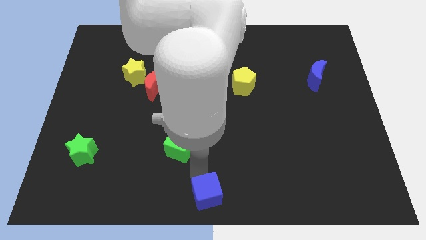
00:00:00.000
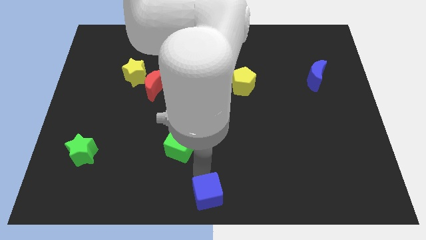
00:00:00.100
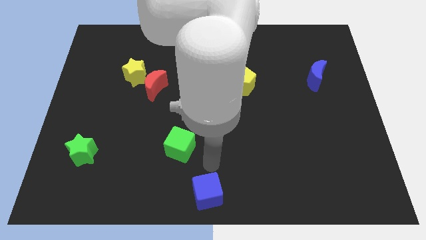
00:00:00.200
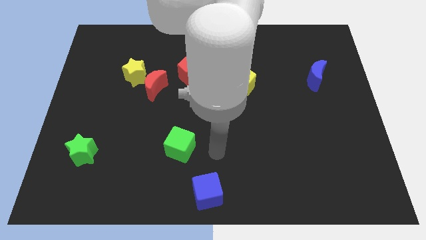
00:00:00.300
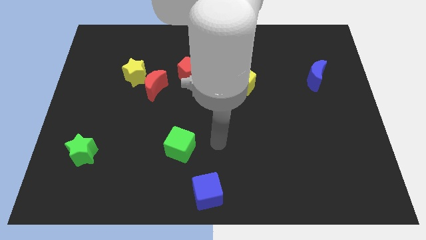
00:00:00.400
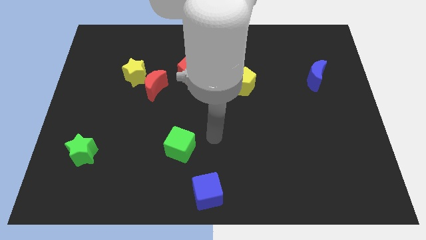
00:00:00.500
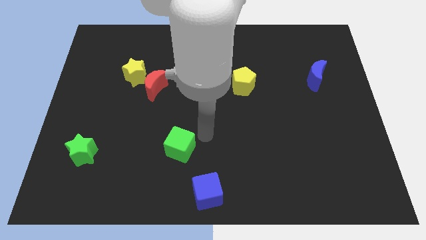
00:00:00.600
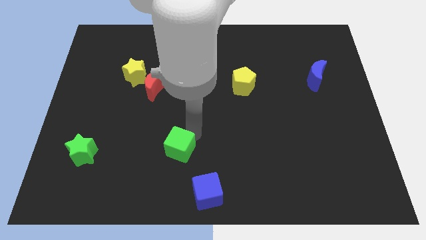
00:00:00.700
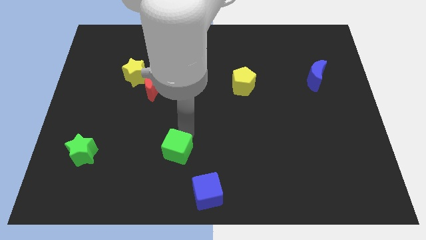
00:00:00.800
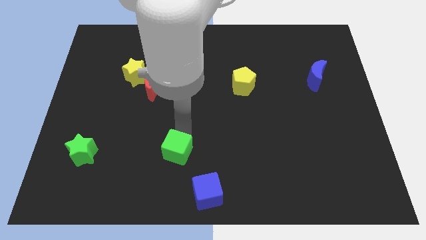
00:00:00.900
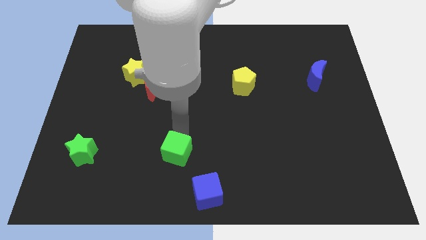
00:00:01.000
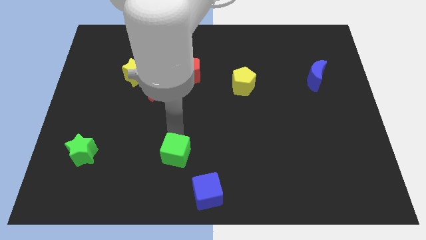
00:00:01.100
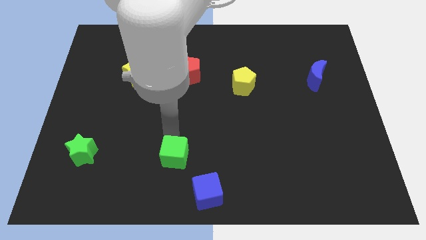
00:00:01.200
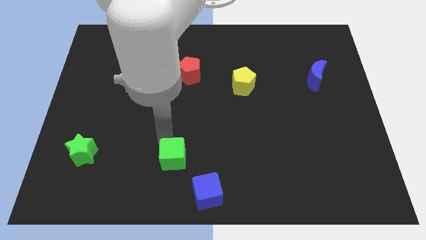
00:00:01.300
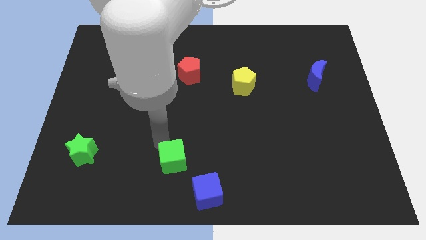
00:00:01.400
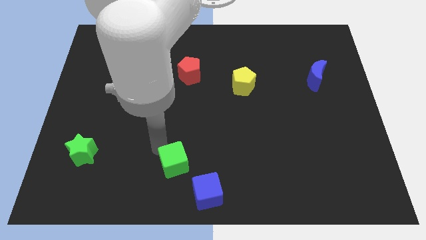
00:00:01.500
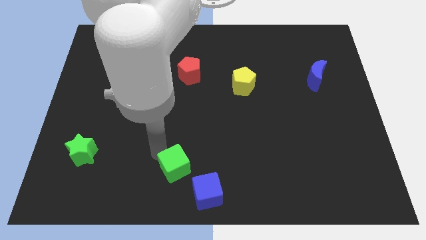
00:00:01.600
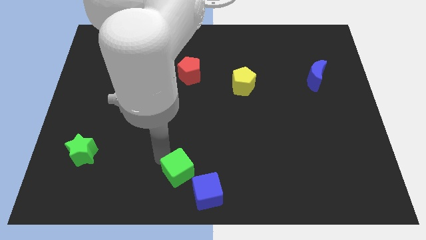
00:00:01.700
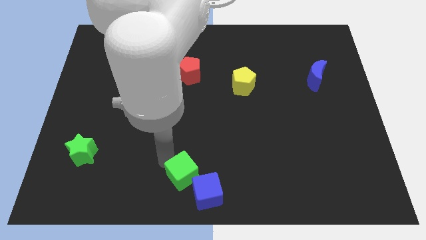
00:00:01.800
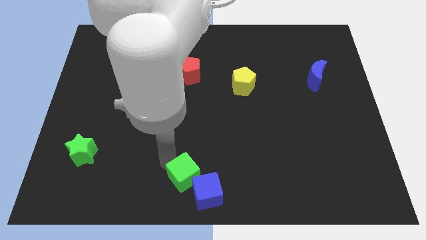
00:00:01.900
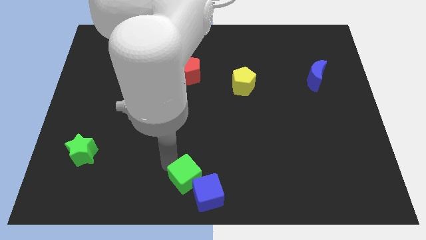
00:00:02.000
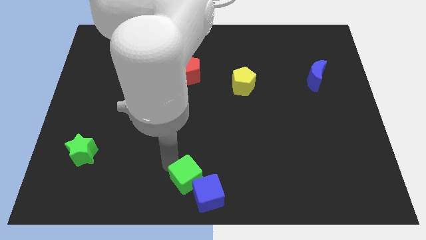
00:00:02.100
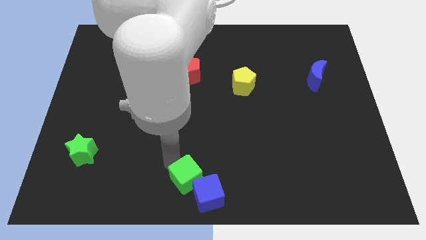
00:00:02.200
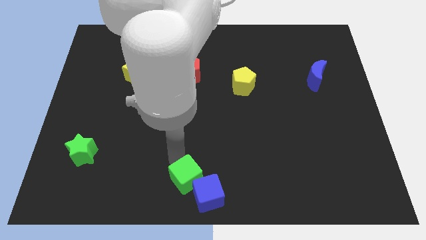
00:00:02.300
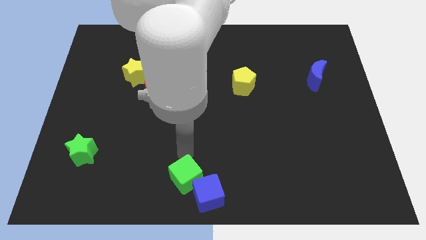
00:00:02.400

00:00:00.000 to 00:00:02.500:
push the green cube close tothe blue cube

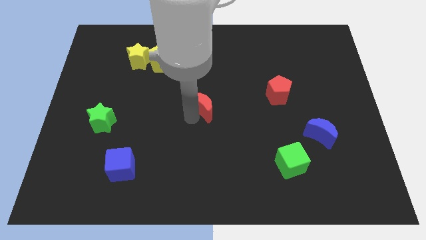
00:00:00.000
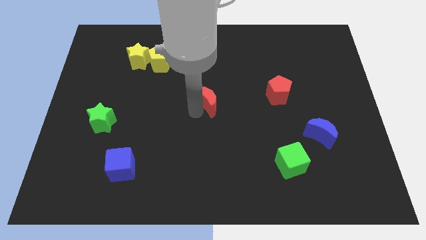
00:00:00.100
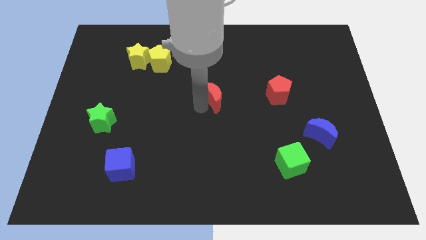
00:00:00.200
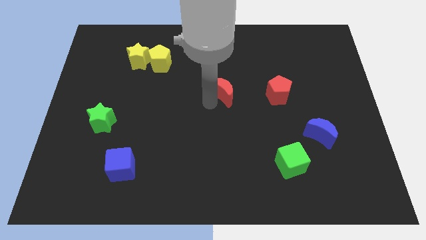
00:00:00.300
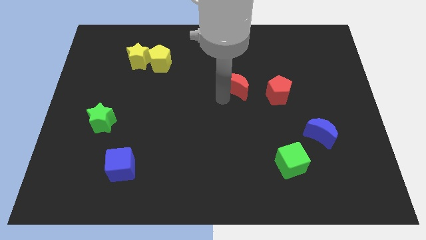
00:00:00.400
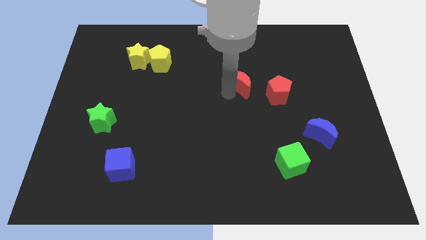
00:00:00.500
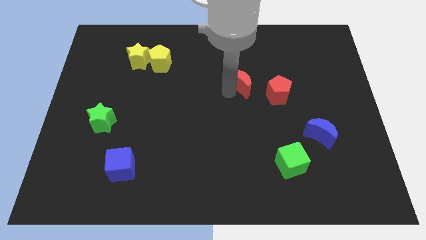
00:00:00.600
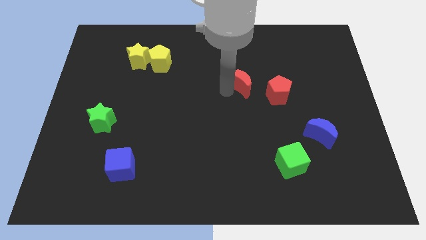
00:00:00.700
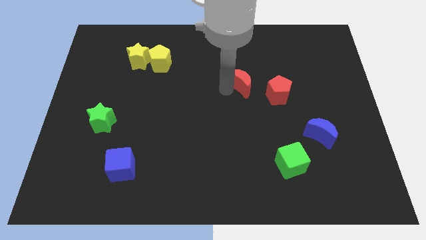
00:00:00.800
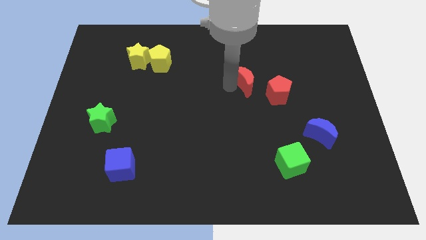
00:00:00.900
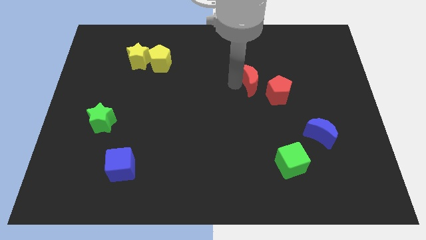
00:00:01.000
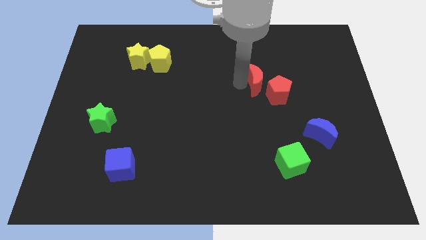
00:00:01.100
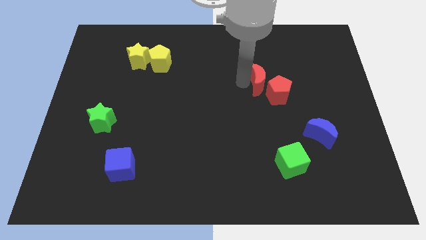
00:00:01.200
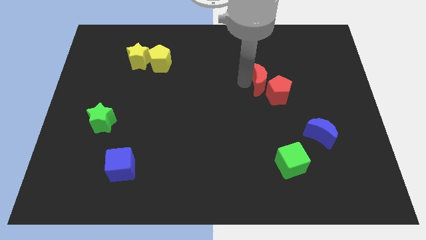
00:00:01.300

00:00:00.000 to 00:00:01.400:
move the red moon to the top left of the red pentagon

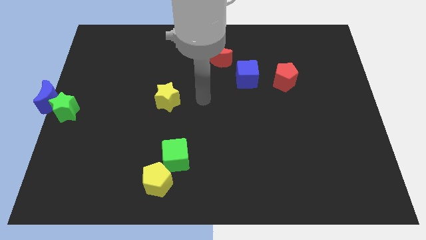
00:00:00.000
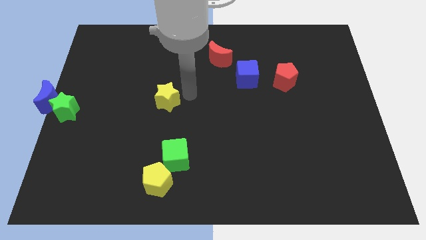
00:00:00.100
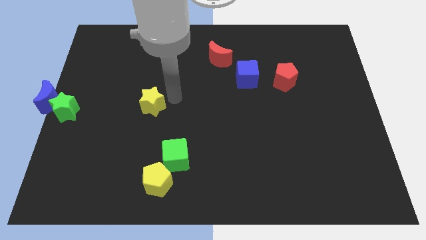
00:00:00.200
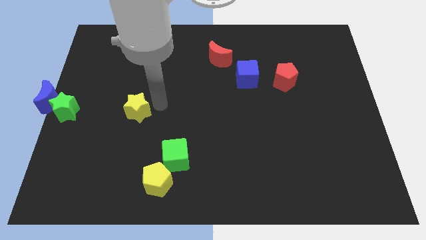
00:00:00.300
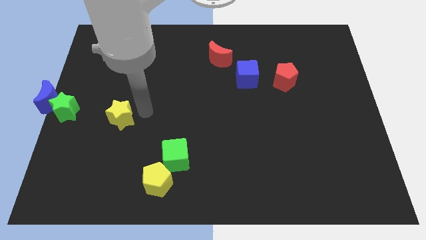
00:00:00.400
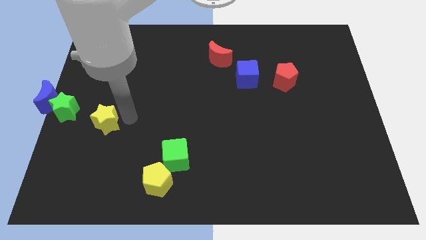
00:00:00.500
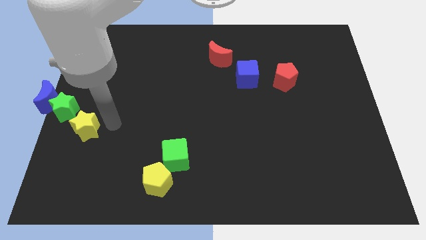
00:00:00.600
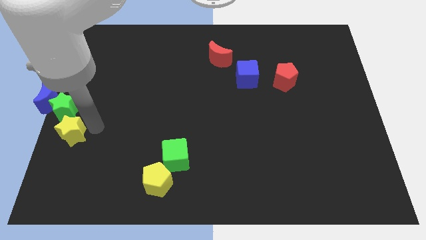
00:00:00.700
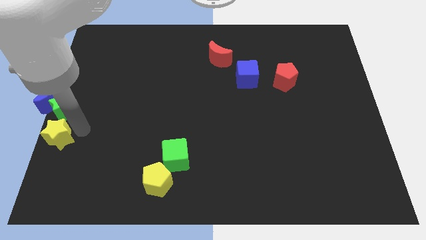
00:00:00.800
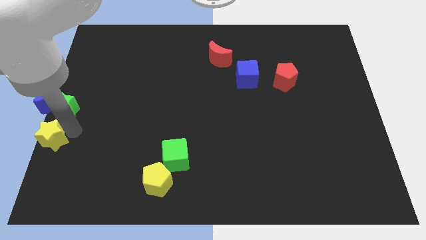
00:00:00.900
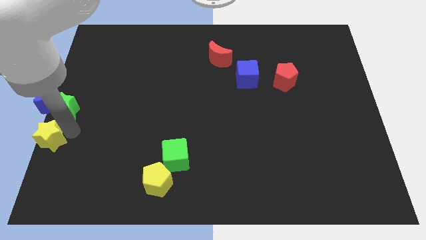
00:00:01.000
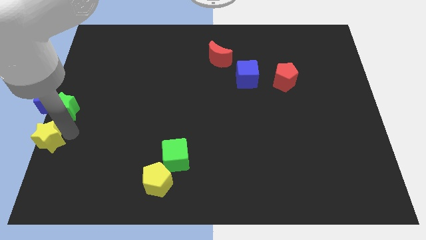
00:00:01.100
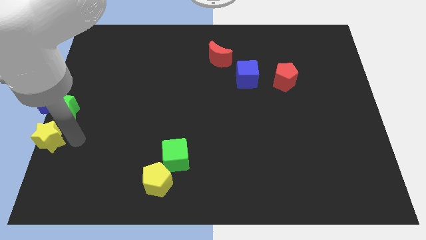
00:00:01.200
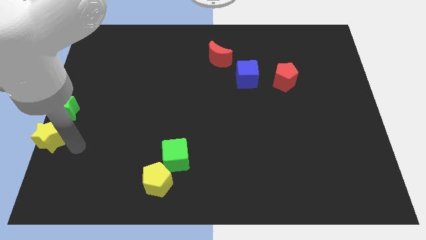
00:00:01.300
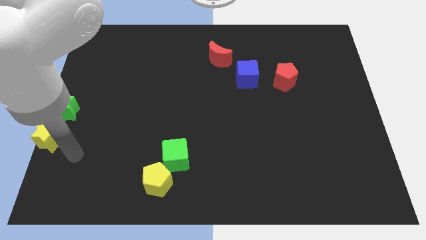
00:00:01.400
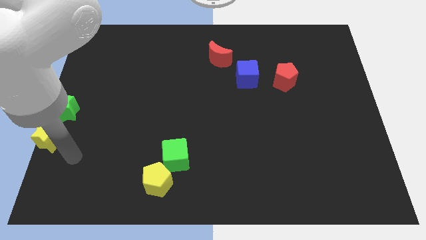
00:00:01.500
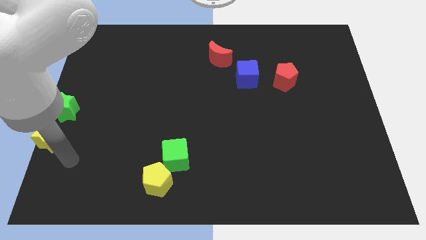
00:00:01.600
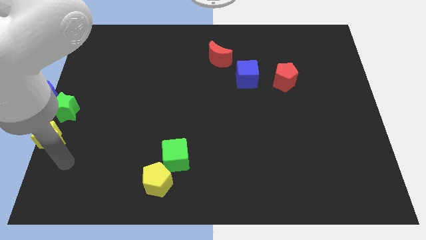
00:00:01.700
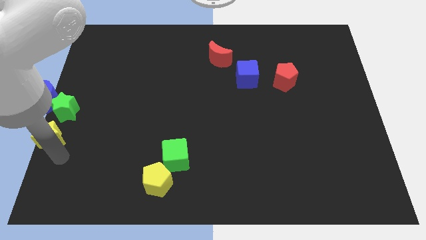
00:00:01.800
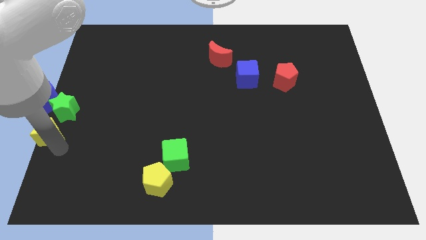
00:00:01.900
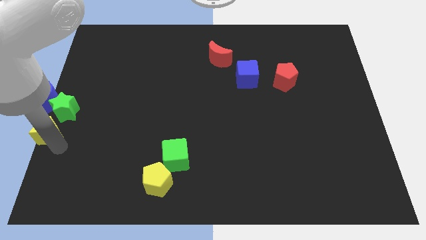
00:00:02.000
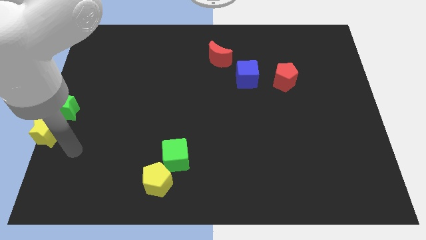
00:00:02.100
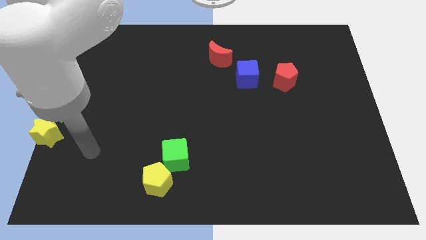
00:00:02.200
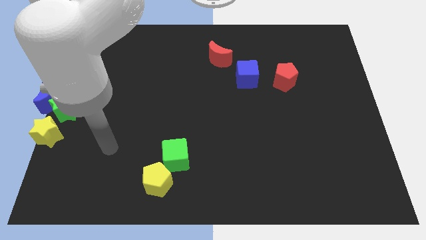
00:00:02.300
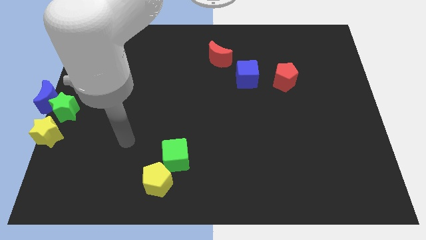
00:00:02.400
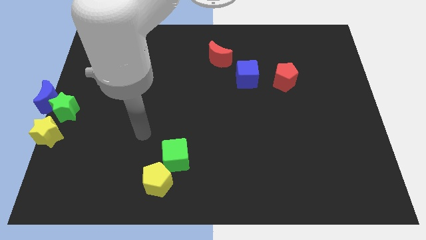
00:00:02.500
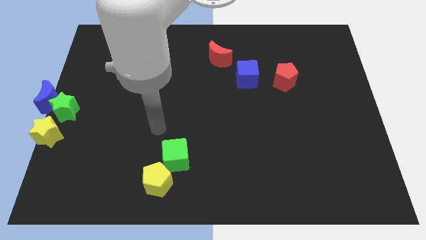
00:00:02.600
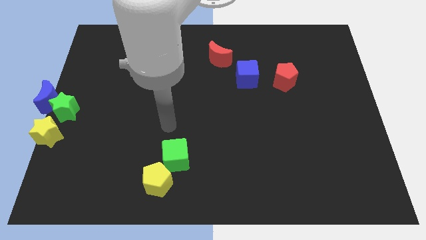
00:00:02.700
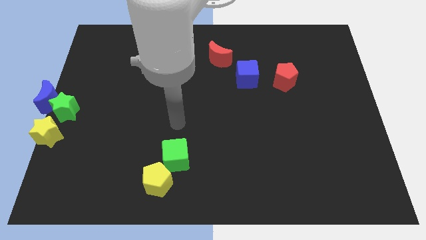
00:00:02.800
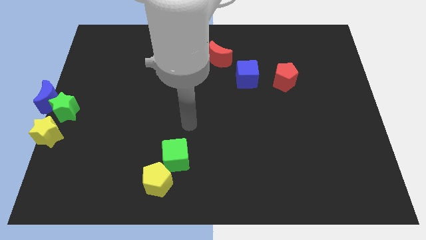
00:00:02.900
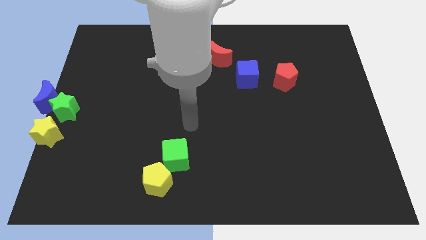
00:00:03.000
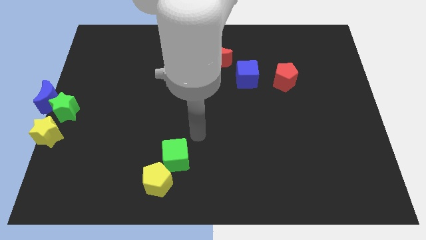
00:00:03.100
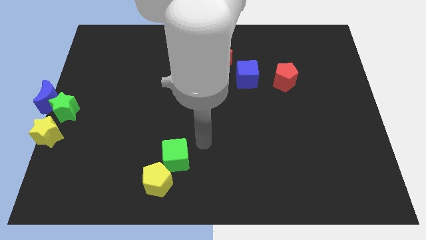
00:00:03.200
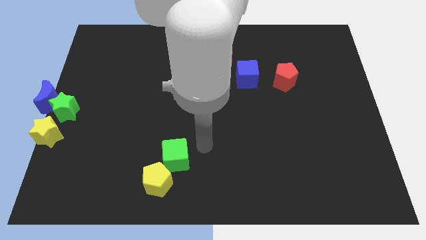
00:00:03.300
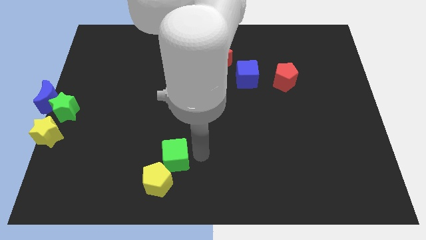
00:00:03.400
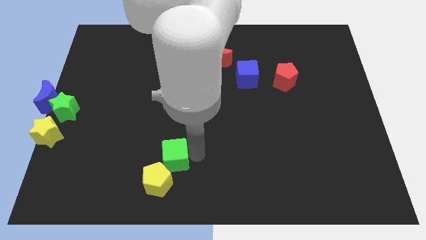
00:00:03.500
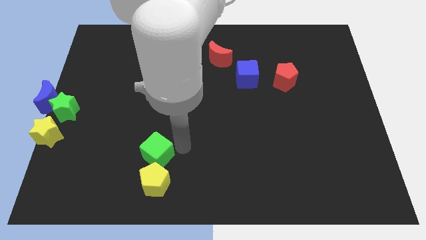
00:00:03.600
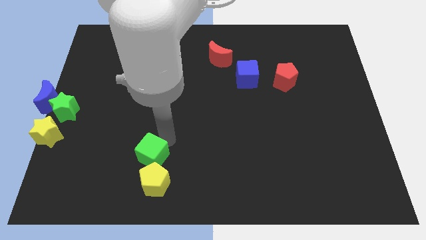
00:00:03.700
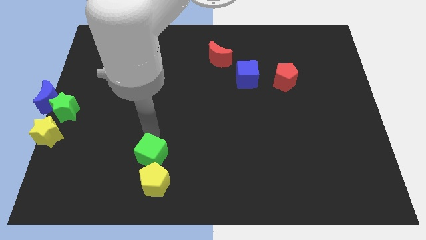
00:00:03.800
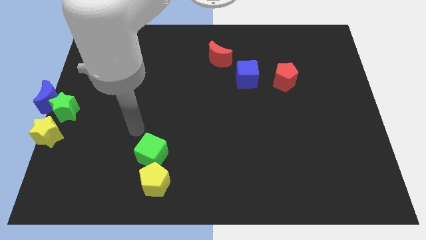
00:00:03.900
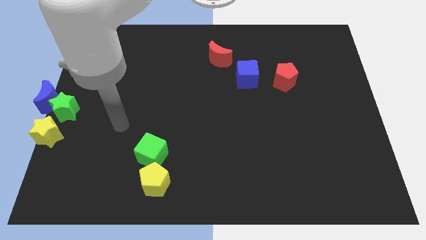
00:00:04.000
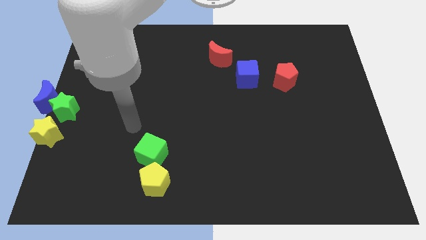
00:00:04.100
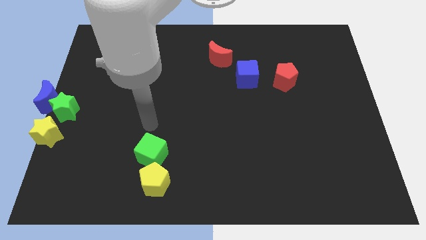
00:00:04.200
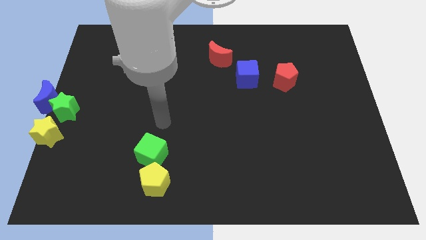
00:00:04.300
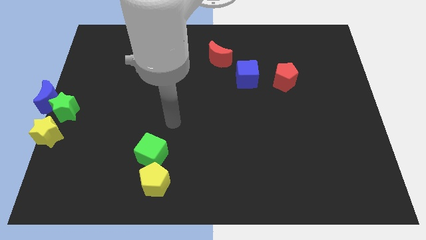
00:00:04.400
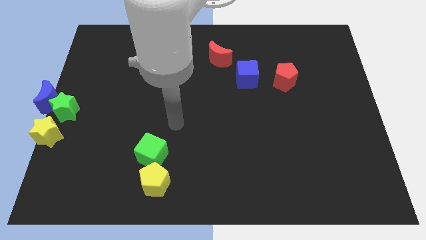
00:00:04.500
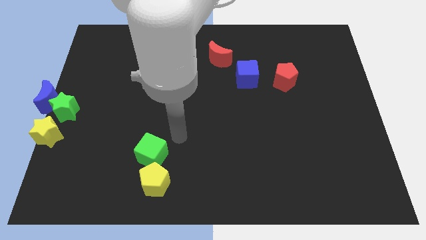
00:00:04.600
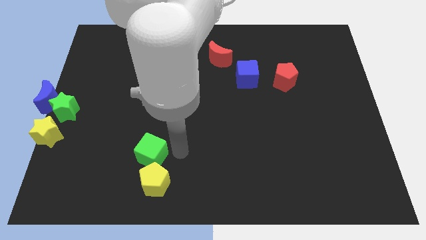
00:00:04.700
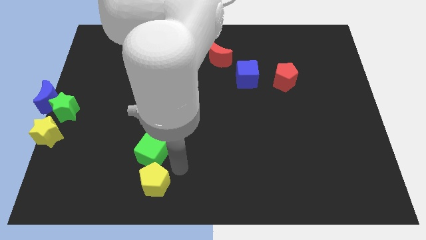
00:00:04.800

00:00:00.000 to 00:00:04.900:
put the yellow star below the blue crescent

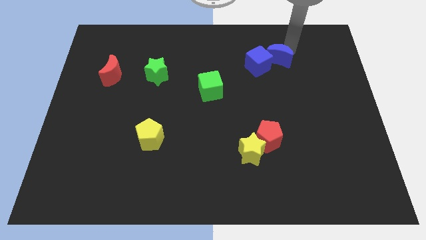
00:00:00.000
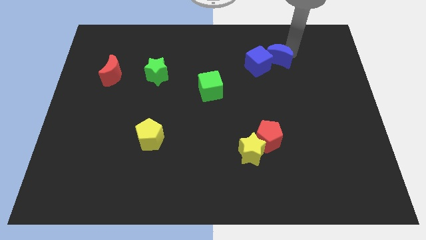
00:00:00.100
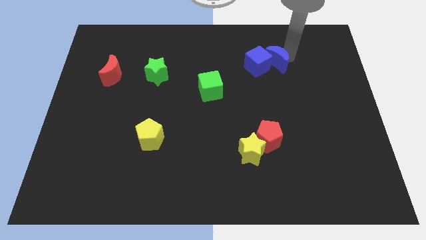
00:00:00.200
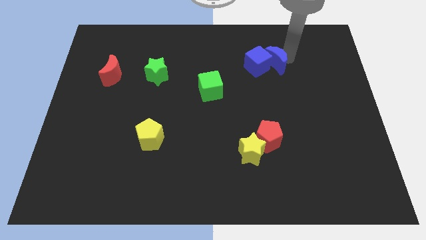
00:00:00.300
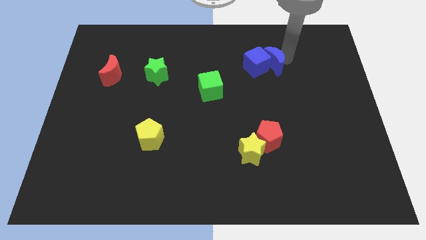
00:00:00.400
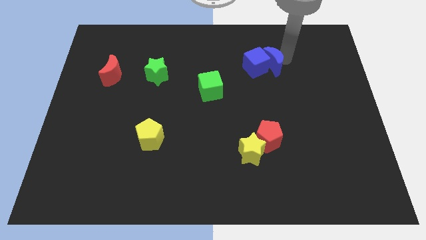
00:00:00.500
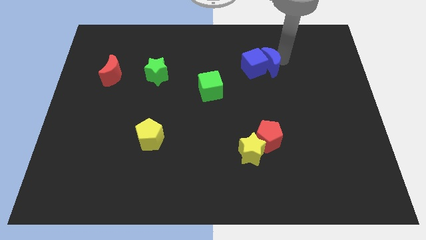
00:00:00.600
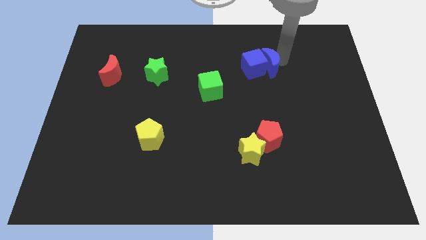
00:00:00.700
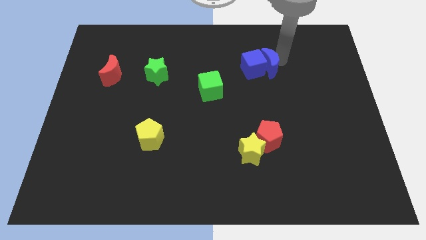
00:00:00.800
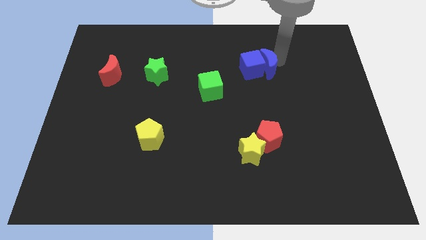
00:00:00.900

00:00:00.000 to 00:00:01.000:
push blue moon into blue cube
